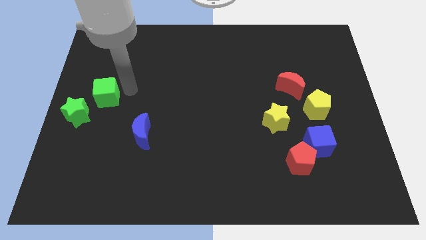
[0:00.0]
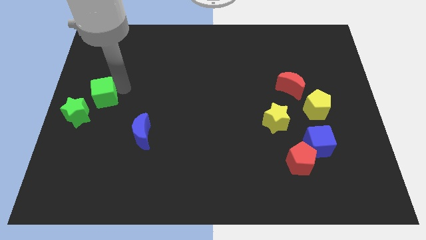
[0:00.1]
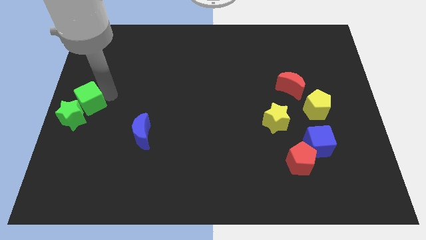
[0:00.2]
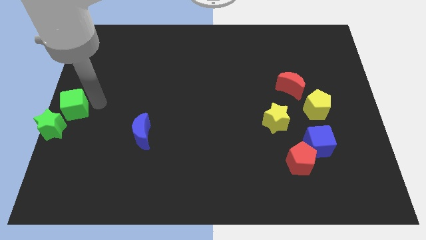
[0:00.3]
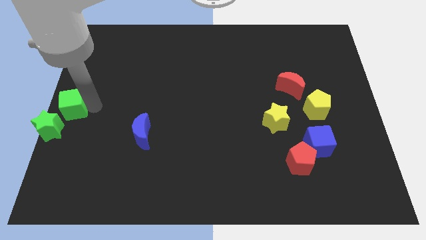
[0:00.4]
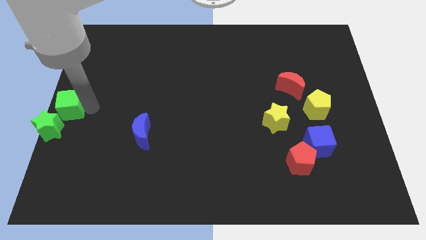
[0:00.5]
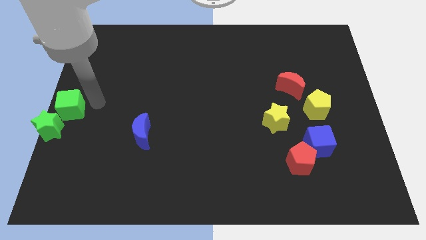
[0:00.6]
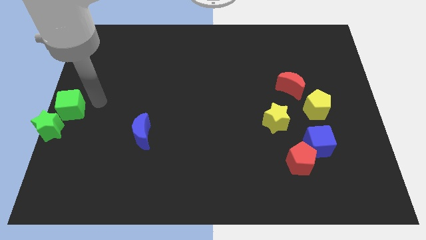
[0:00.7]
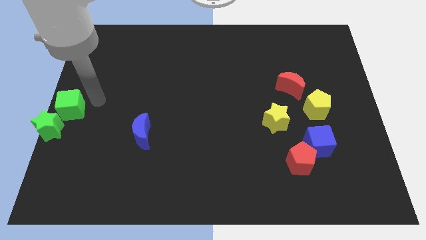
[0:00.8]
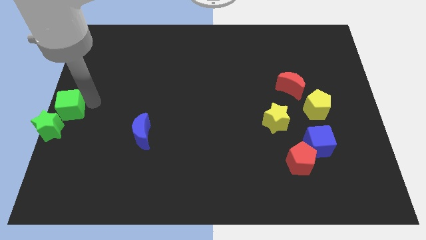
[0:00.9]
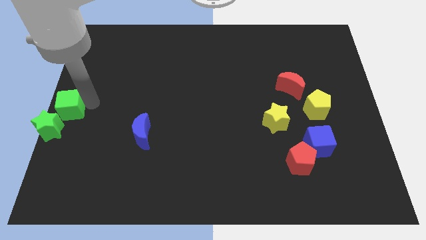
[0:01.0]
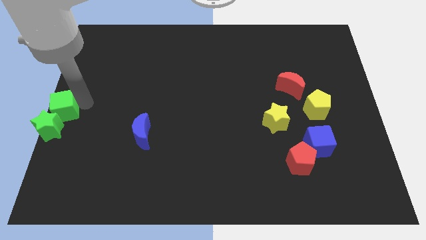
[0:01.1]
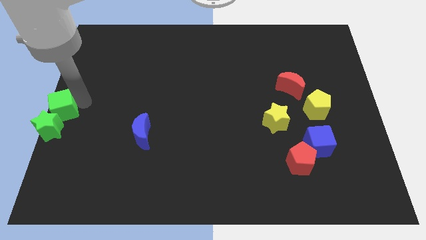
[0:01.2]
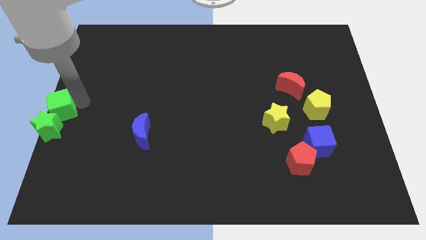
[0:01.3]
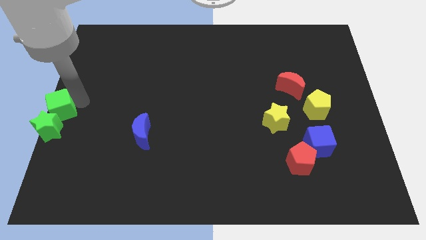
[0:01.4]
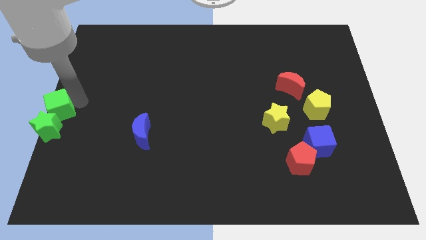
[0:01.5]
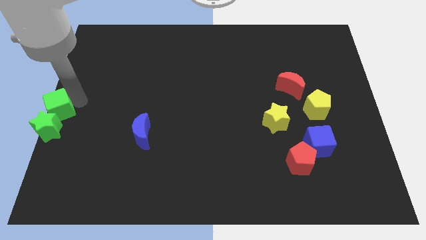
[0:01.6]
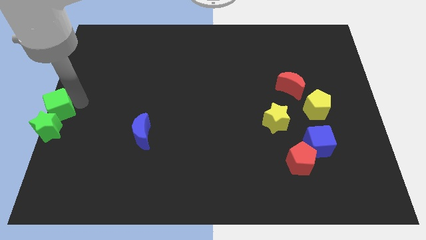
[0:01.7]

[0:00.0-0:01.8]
push the green cube into green star

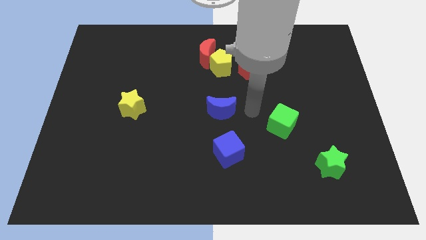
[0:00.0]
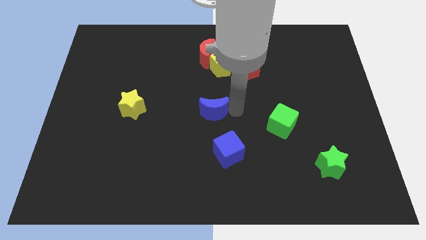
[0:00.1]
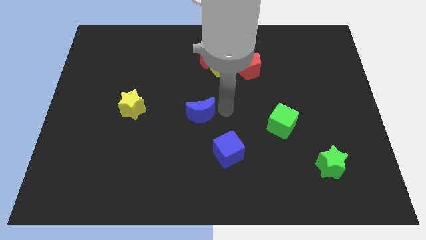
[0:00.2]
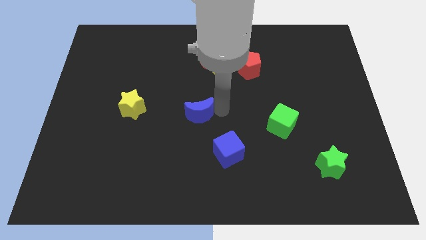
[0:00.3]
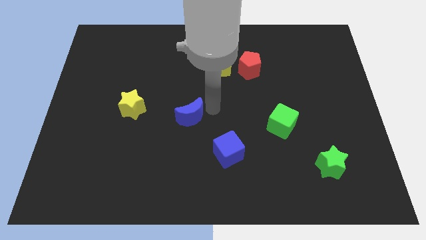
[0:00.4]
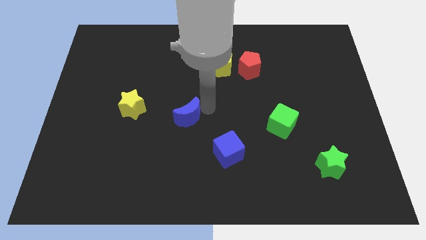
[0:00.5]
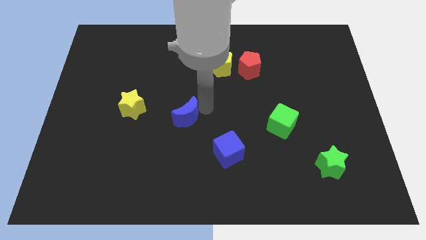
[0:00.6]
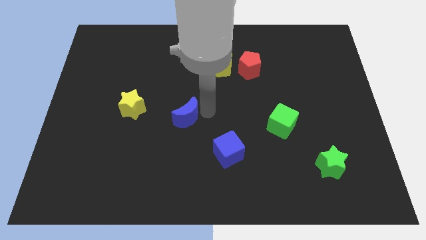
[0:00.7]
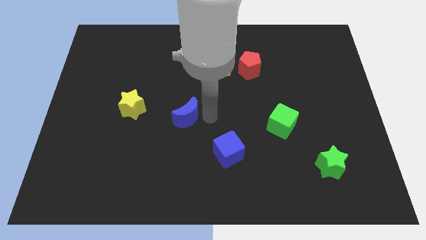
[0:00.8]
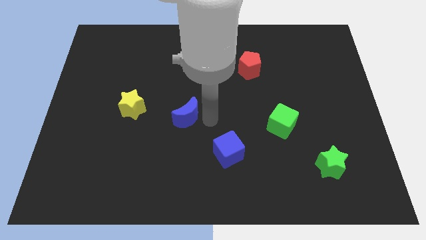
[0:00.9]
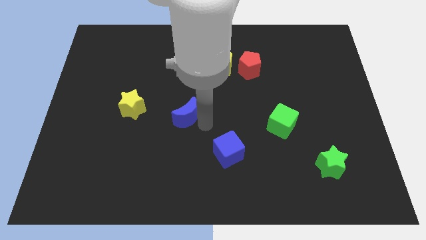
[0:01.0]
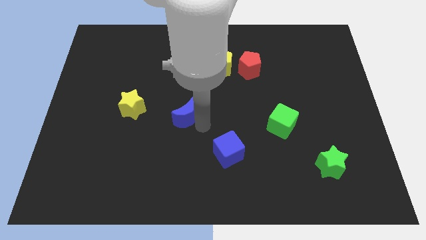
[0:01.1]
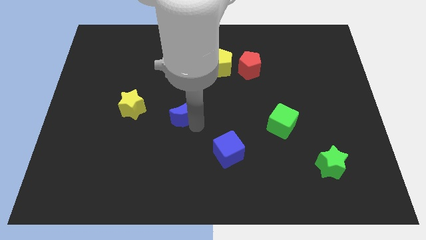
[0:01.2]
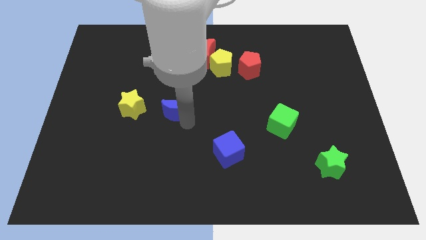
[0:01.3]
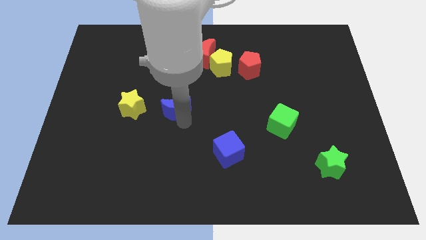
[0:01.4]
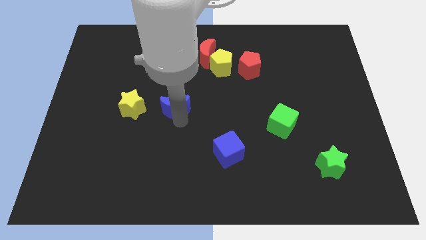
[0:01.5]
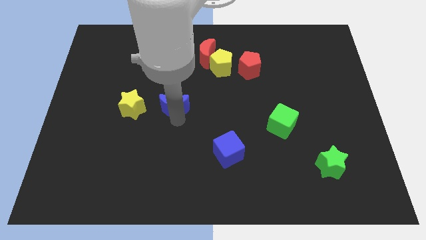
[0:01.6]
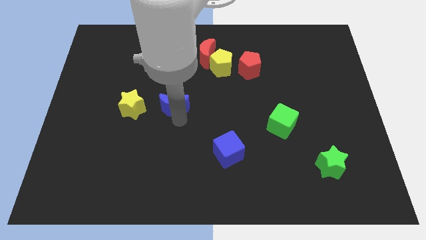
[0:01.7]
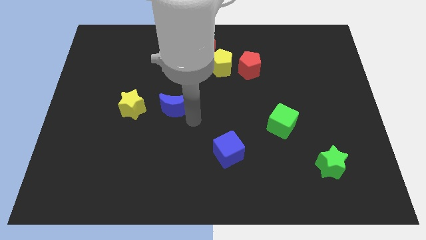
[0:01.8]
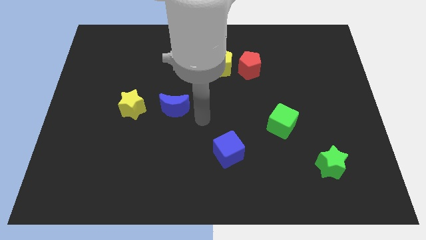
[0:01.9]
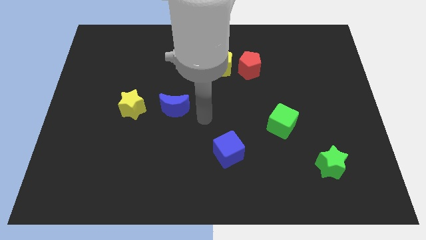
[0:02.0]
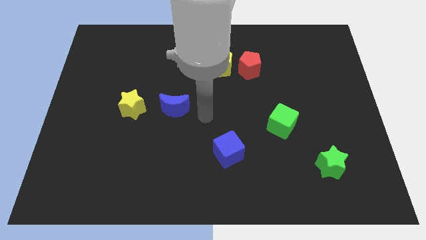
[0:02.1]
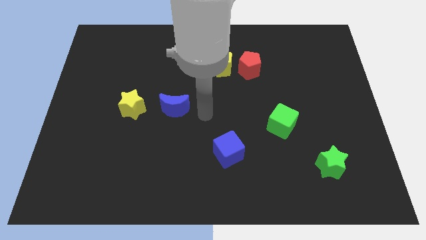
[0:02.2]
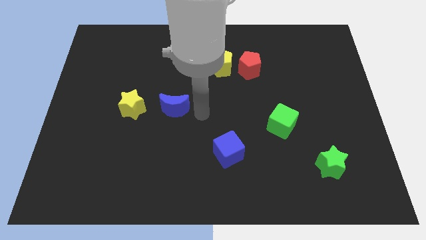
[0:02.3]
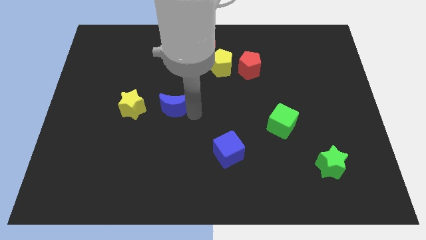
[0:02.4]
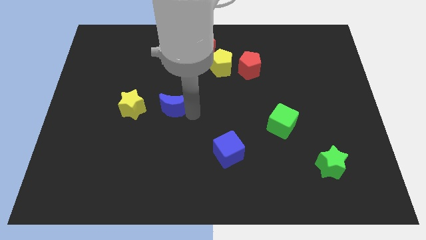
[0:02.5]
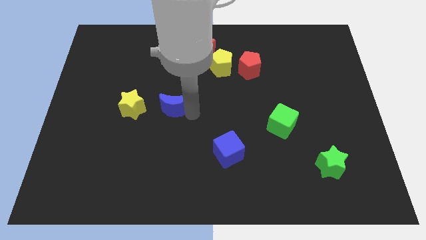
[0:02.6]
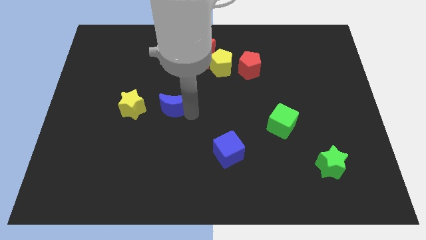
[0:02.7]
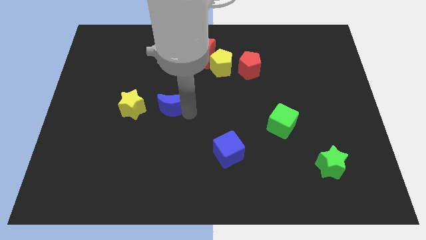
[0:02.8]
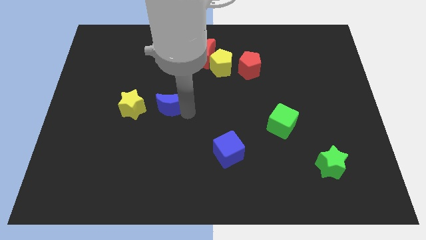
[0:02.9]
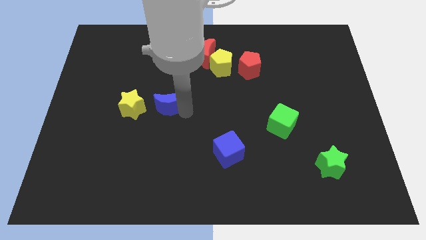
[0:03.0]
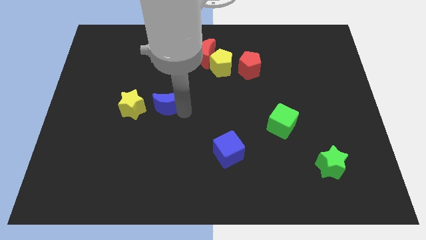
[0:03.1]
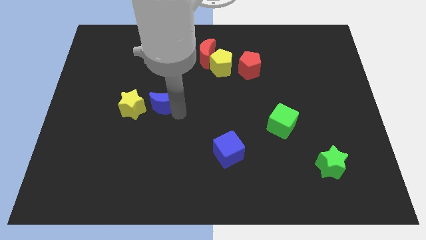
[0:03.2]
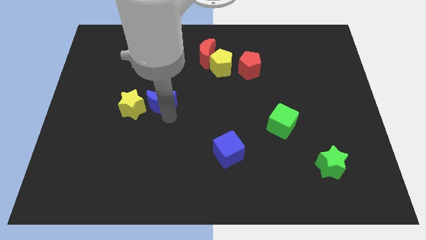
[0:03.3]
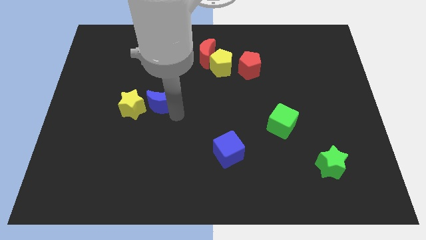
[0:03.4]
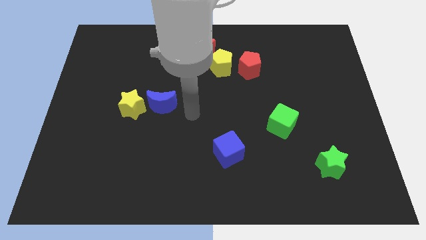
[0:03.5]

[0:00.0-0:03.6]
move the blue crescent right side of the yellow star

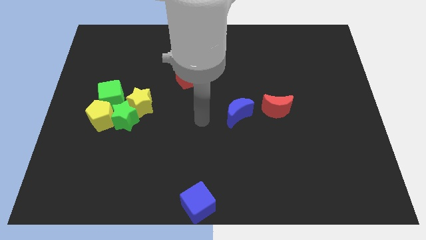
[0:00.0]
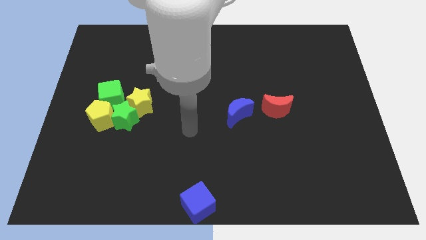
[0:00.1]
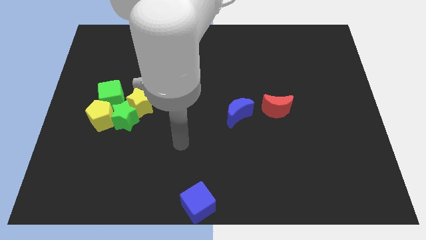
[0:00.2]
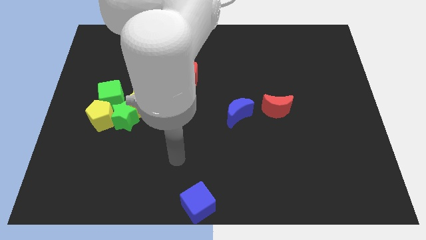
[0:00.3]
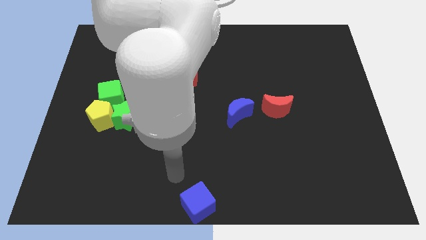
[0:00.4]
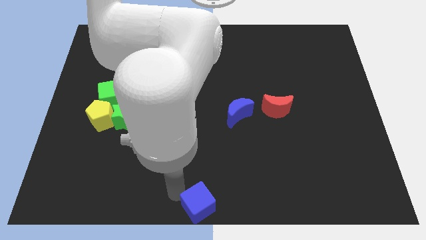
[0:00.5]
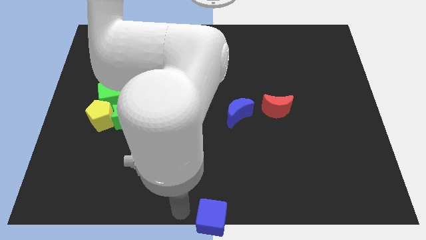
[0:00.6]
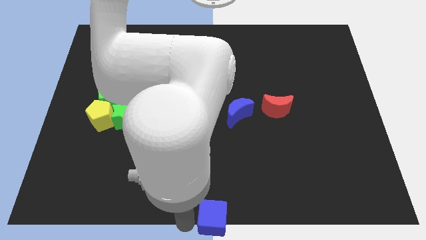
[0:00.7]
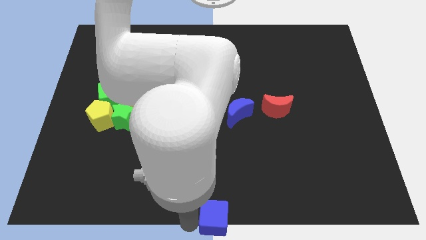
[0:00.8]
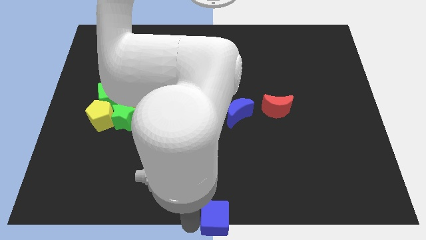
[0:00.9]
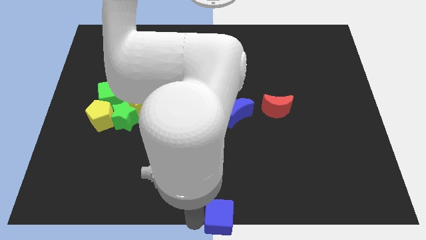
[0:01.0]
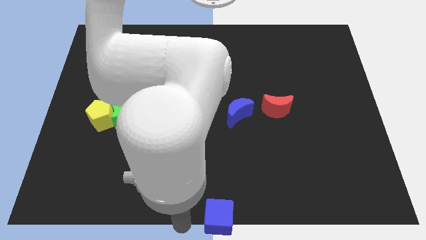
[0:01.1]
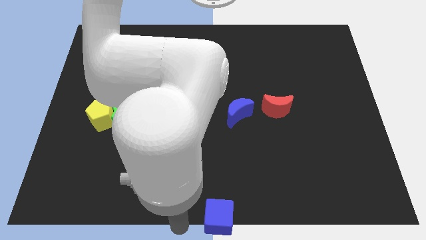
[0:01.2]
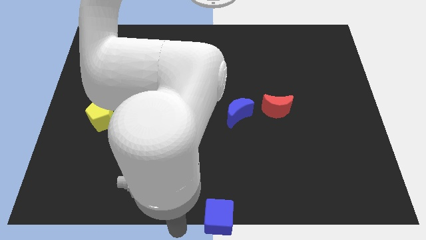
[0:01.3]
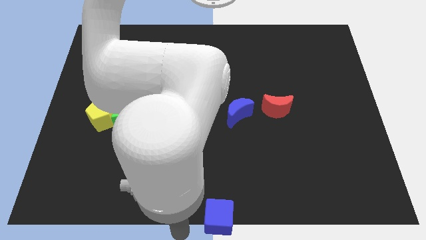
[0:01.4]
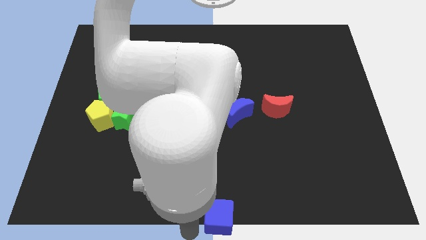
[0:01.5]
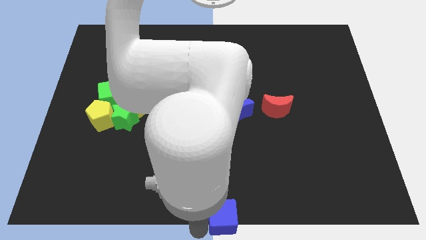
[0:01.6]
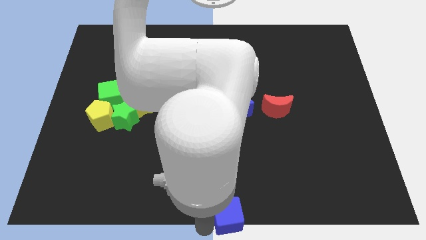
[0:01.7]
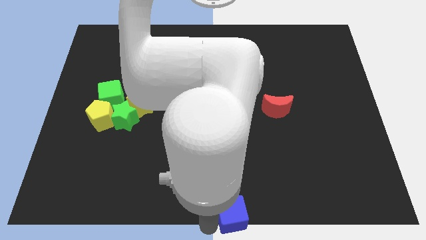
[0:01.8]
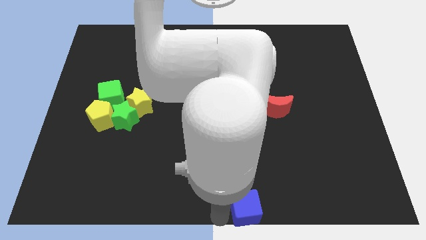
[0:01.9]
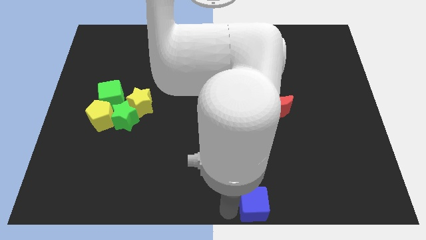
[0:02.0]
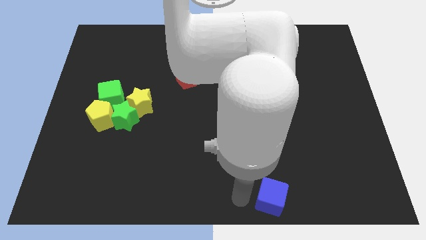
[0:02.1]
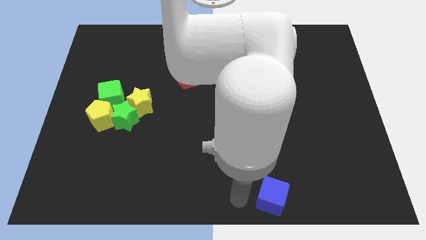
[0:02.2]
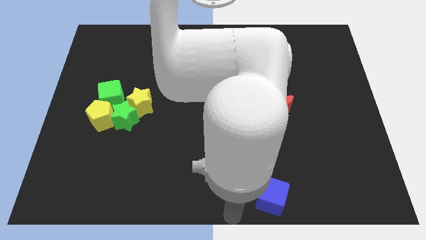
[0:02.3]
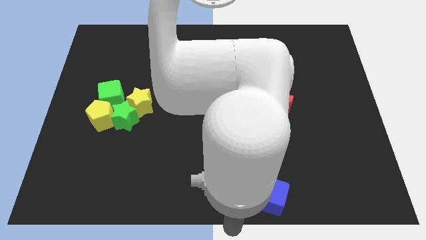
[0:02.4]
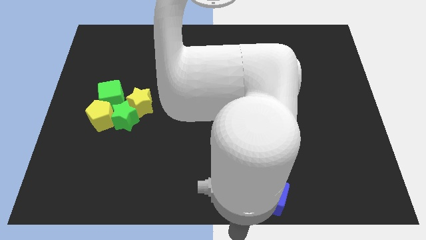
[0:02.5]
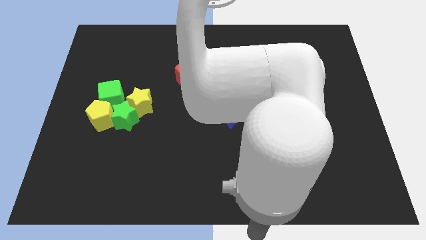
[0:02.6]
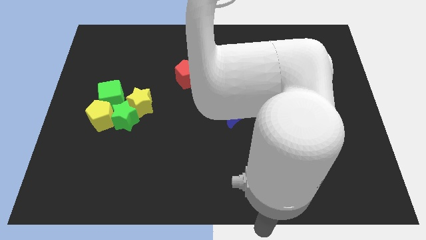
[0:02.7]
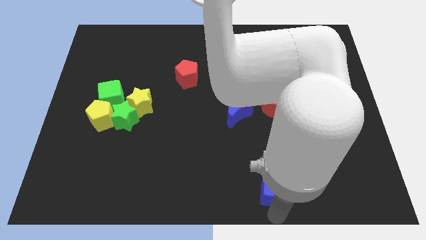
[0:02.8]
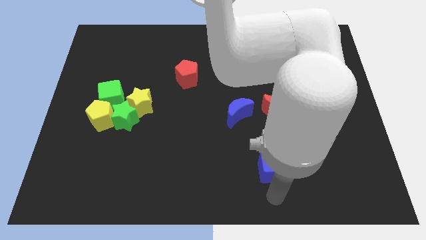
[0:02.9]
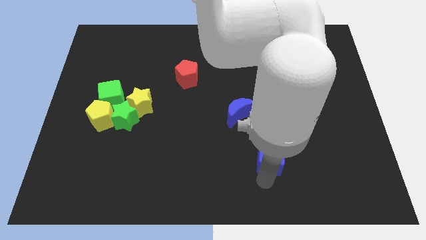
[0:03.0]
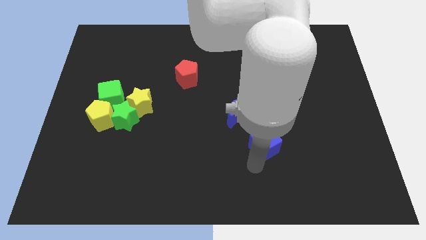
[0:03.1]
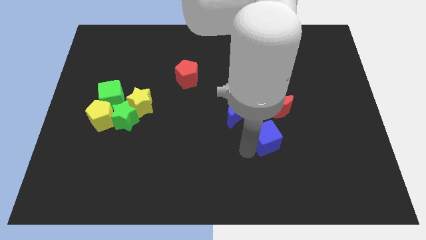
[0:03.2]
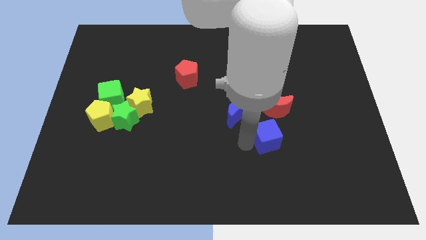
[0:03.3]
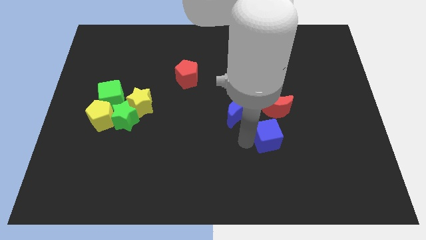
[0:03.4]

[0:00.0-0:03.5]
move the blue cube vertically to the bottom of the red crescent
